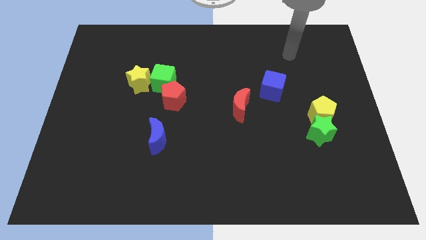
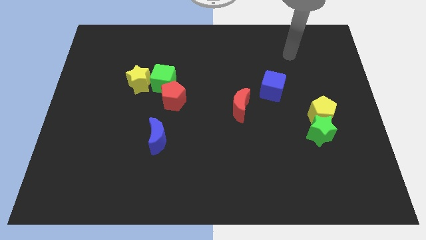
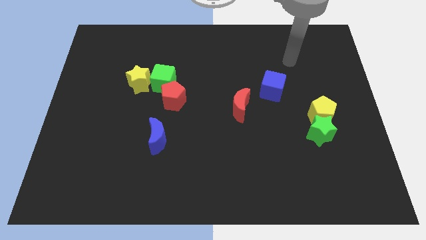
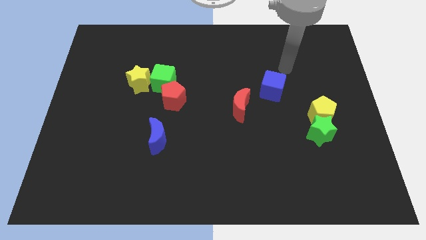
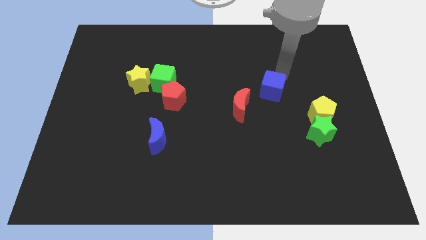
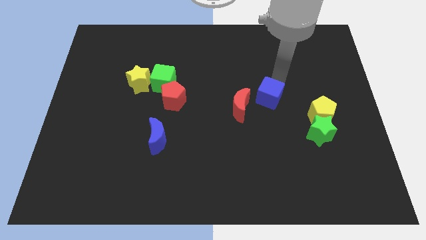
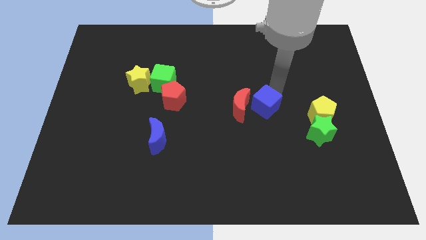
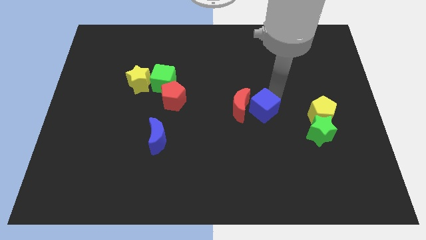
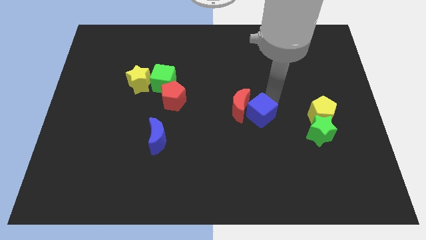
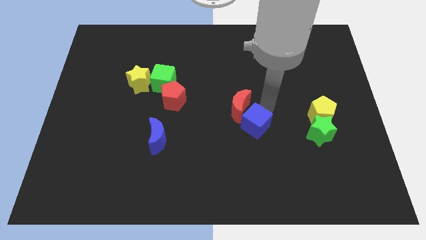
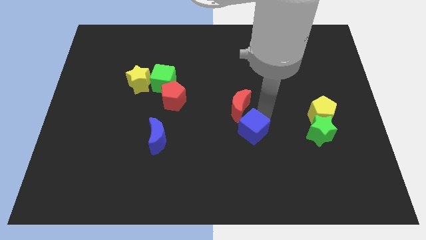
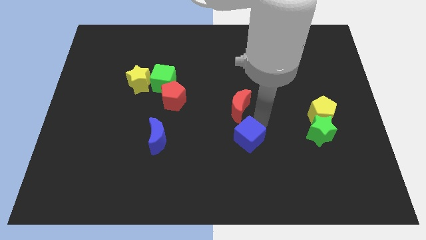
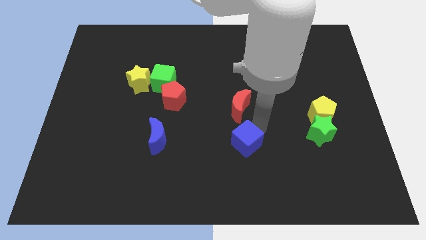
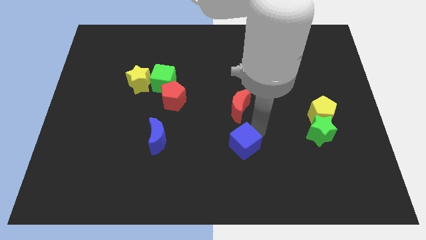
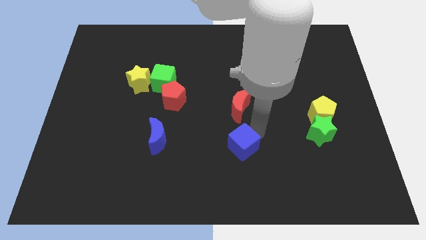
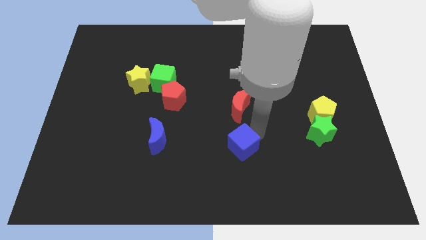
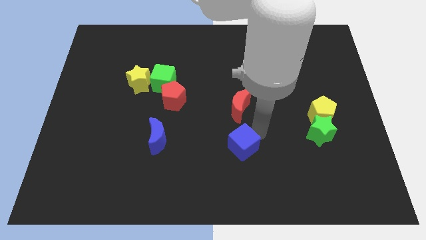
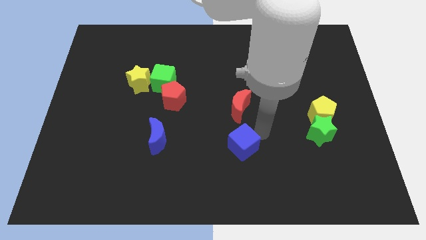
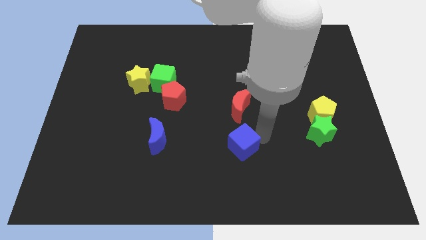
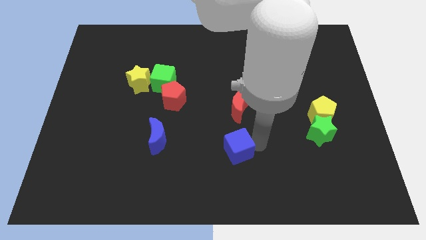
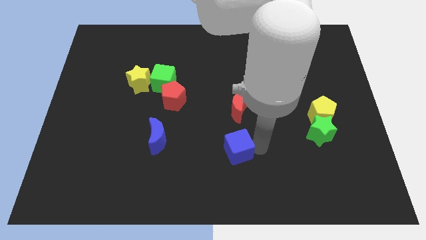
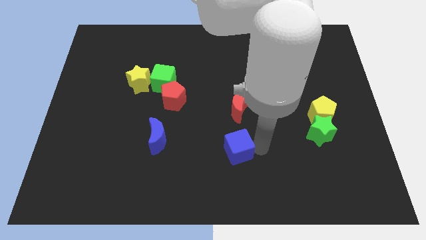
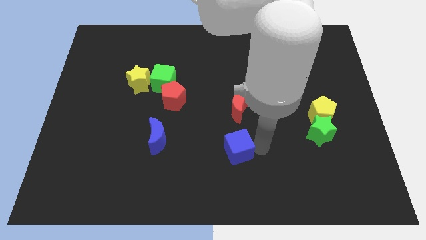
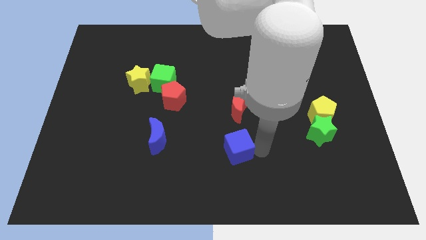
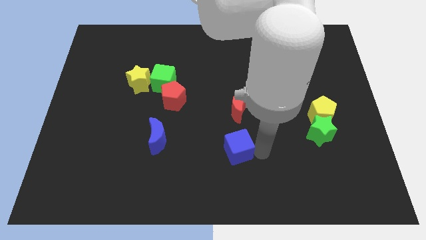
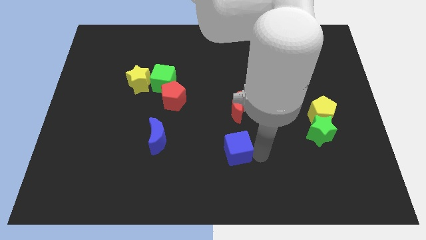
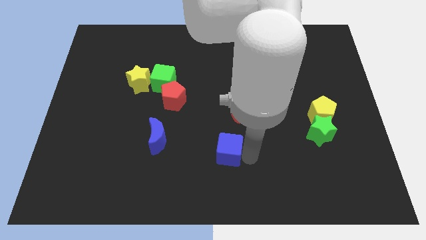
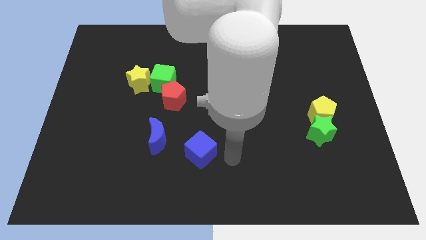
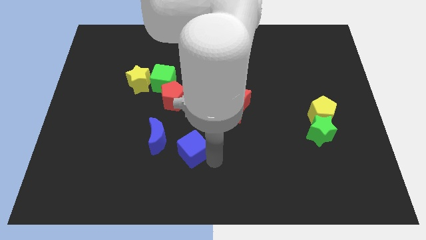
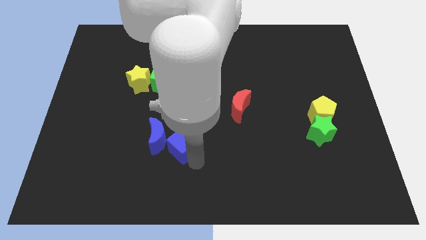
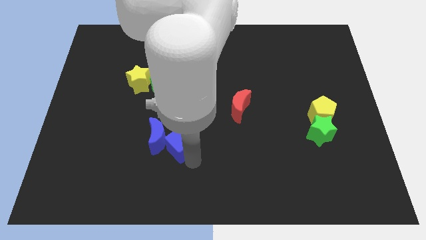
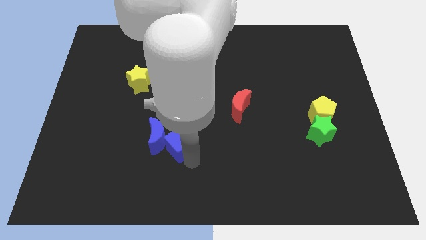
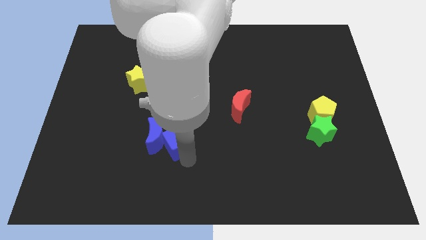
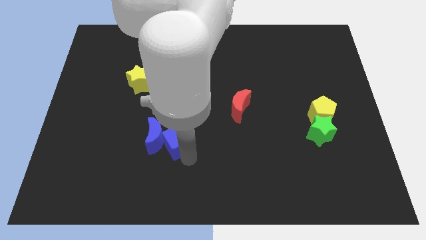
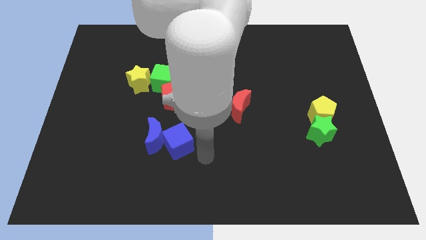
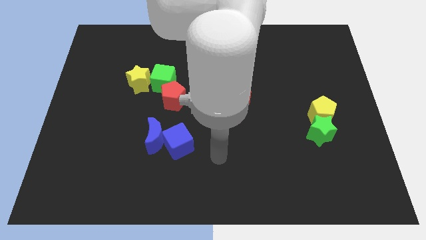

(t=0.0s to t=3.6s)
move the blue cube into the right of the blue moon

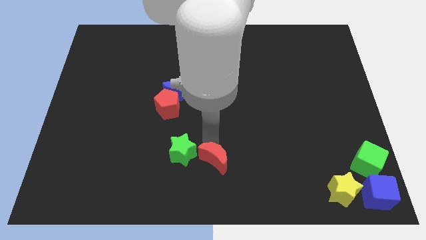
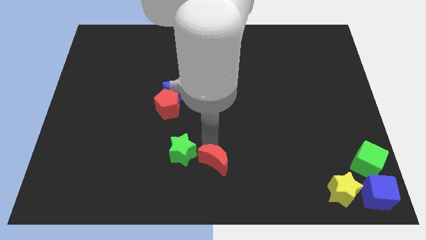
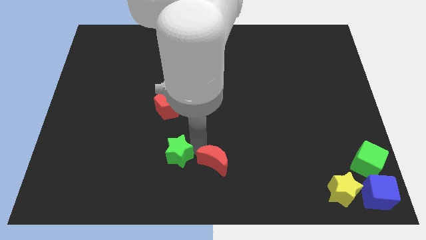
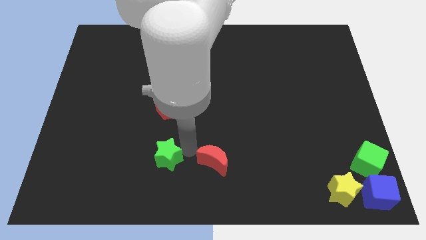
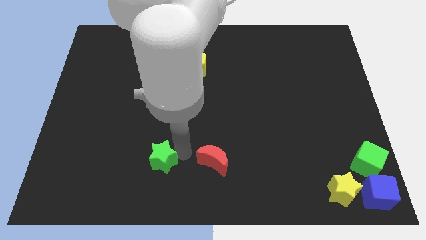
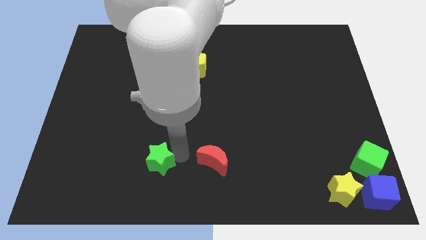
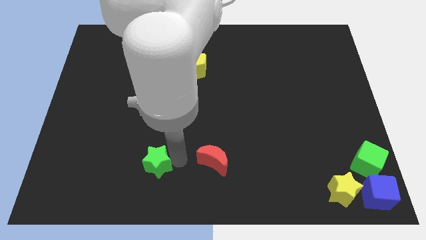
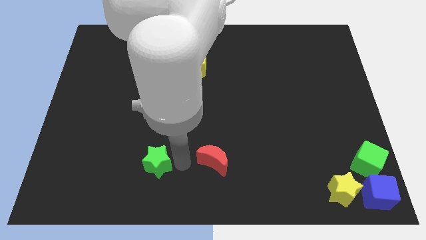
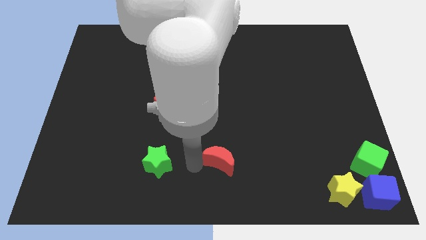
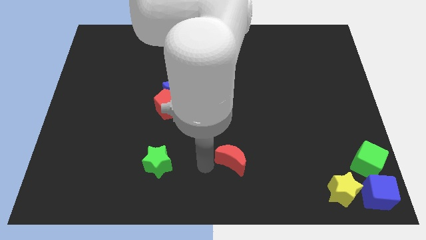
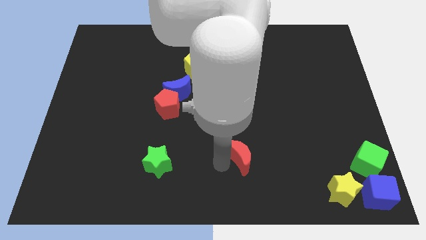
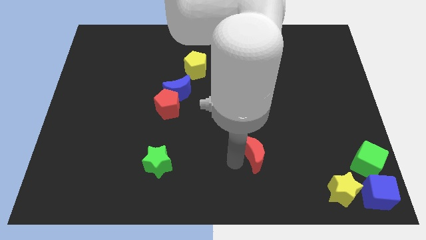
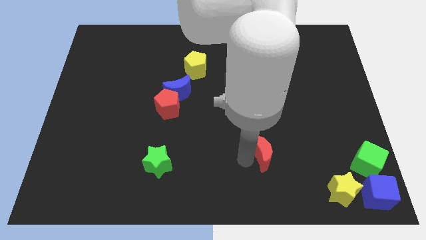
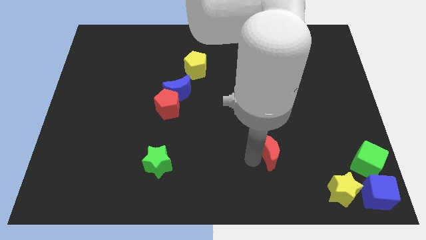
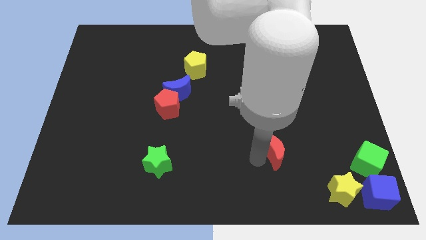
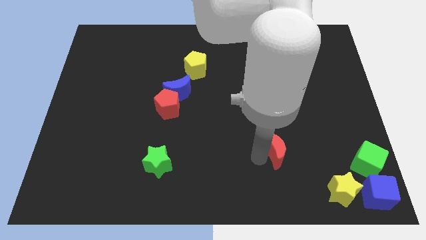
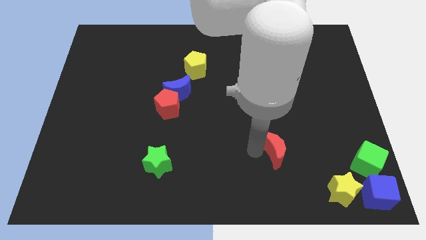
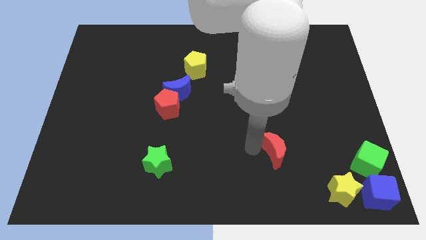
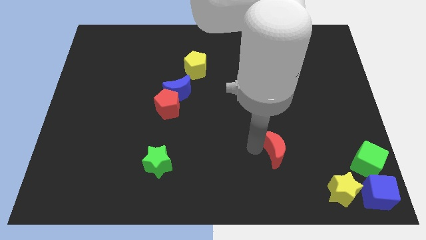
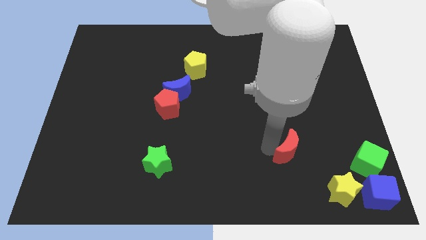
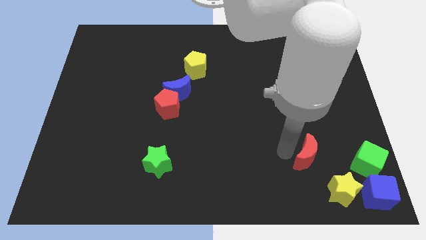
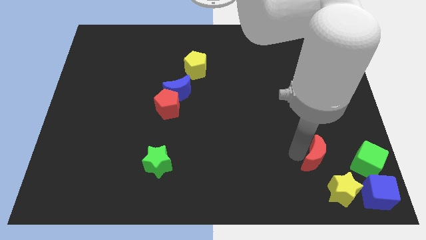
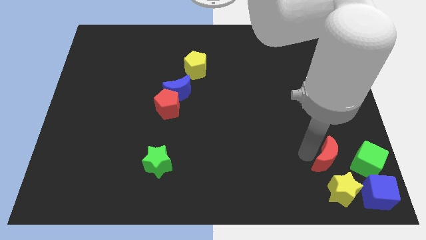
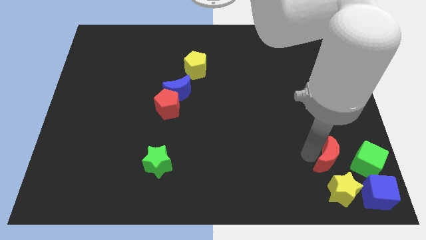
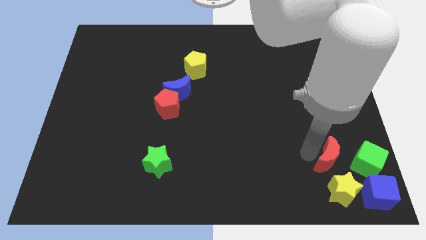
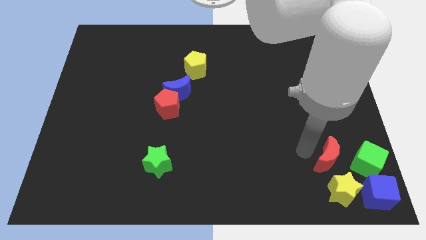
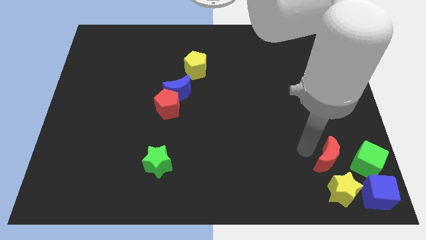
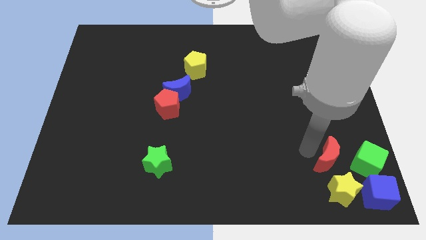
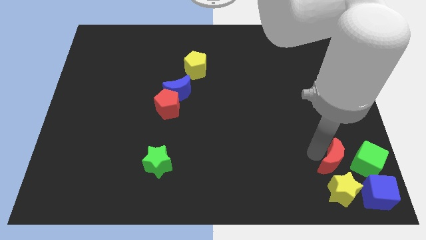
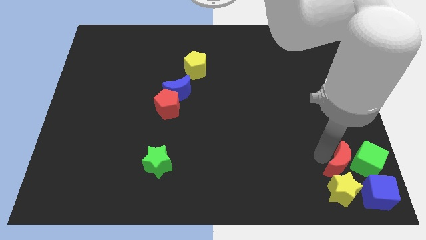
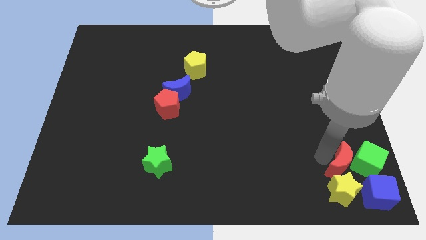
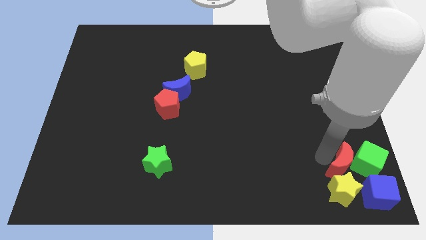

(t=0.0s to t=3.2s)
place the red crescent to the left of the green cube

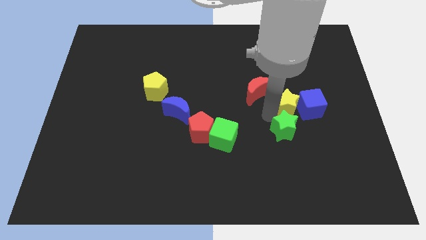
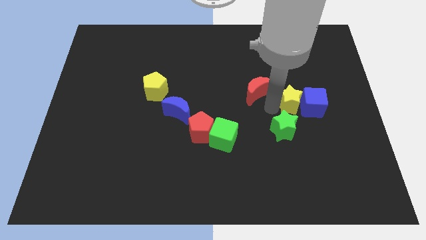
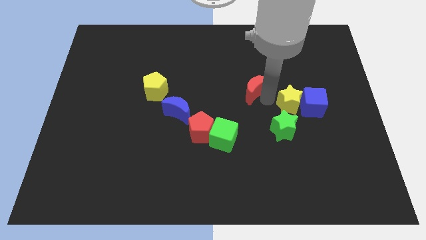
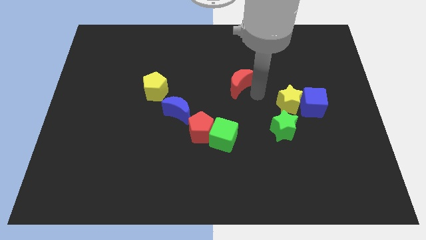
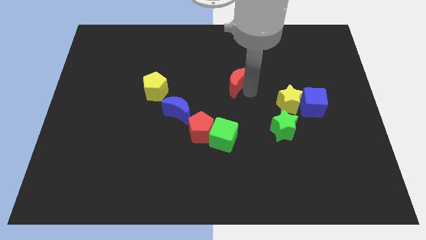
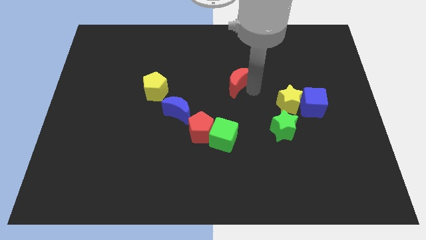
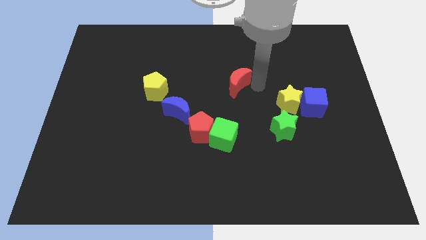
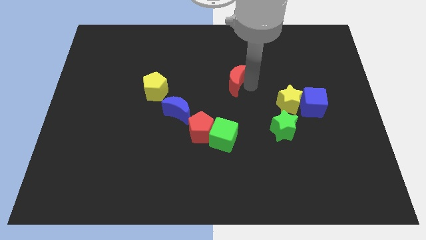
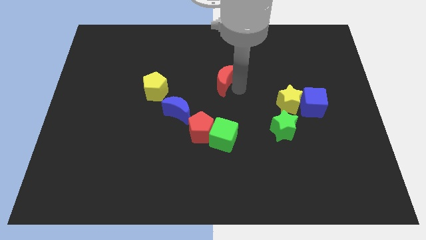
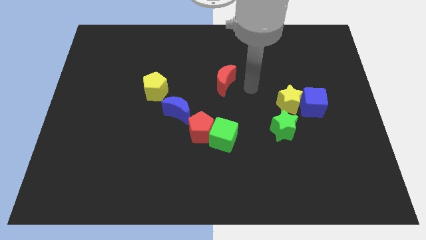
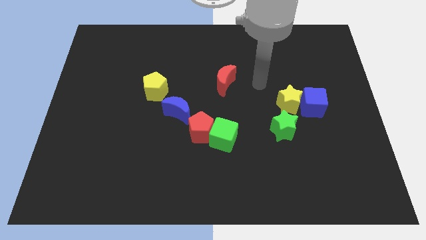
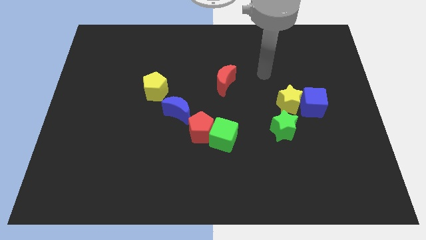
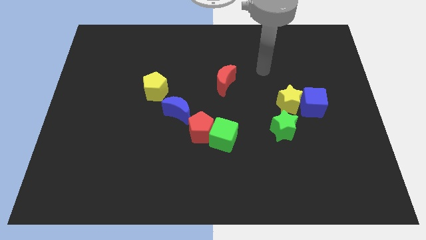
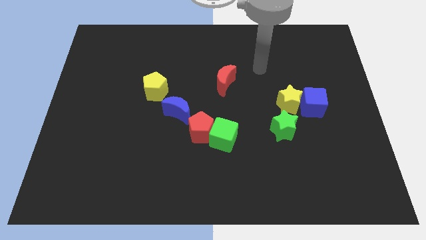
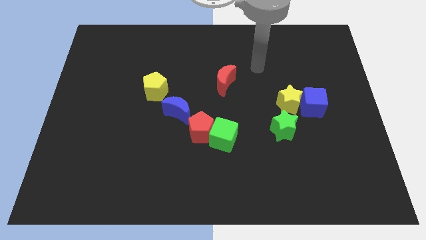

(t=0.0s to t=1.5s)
move the red crescent vertical to the green cube

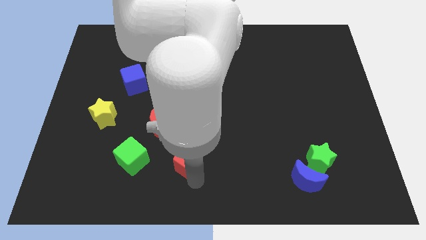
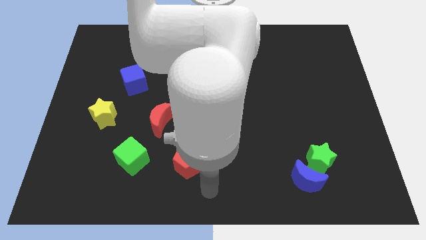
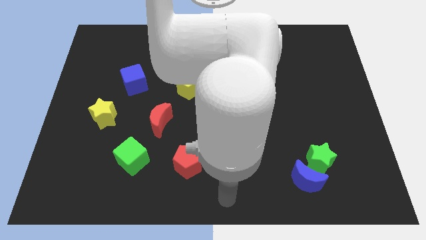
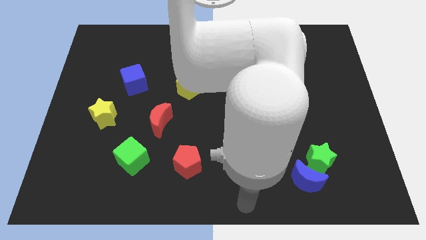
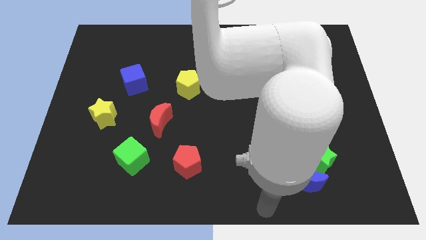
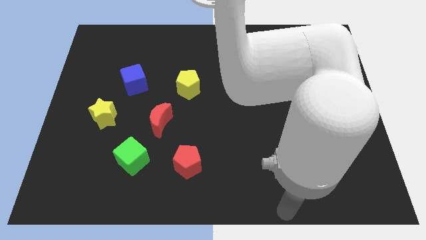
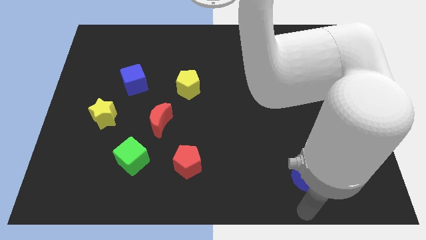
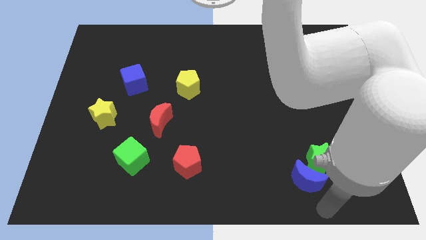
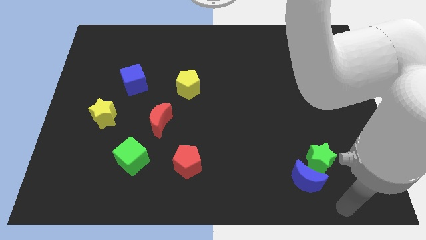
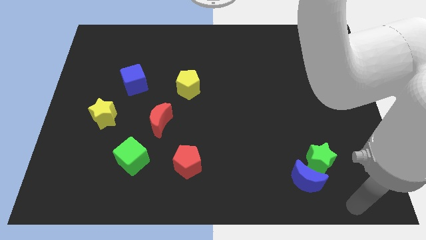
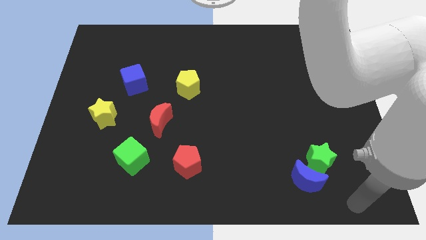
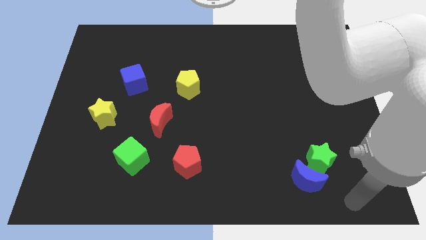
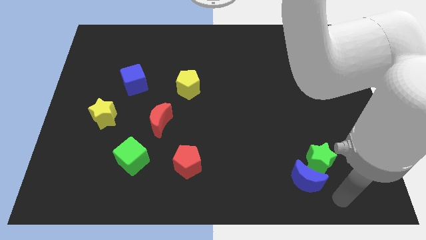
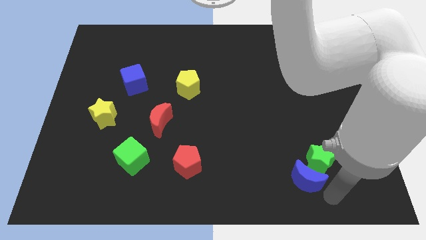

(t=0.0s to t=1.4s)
move your arm away from the red pentagon
